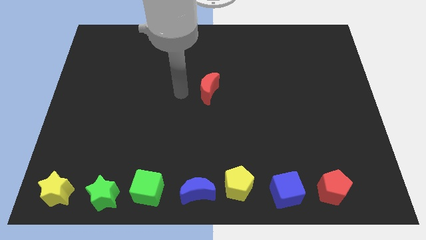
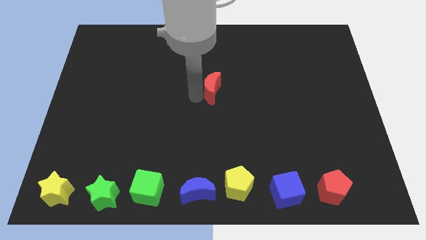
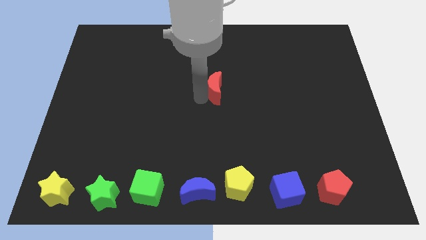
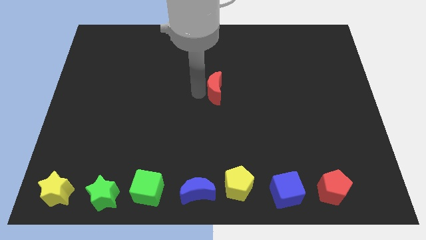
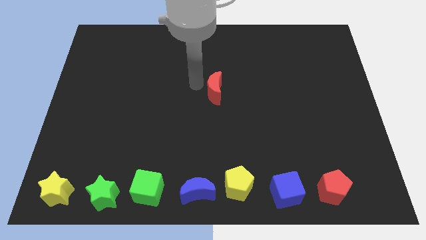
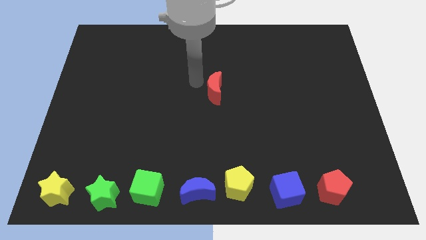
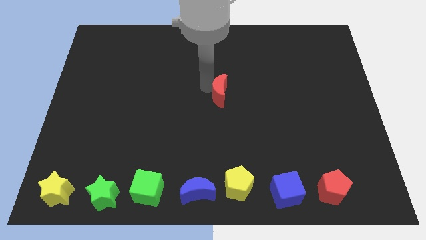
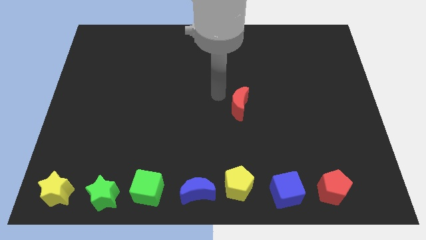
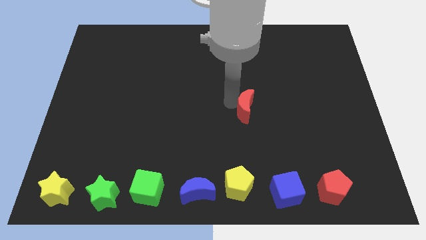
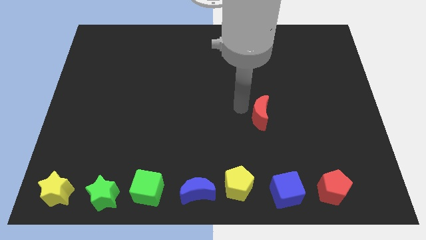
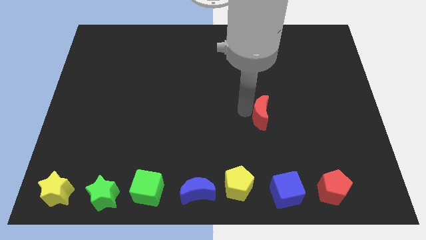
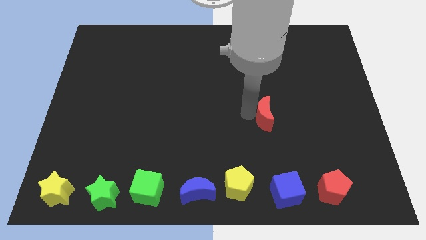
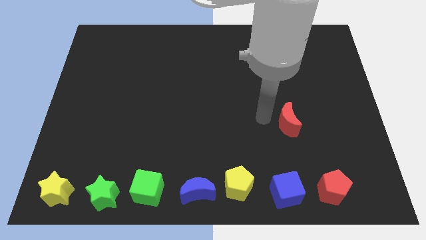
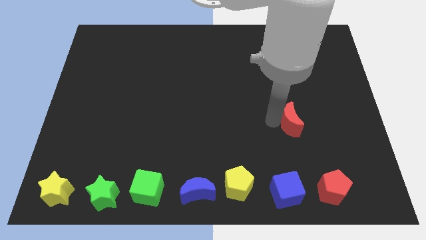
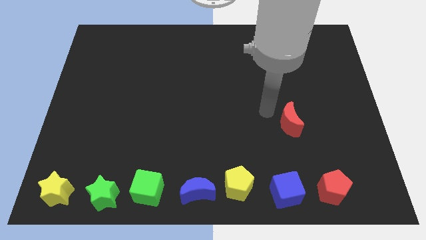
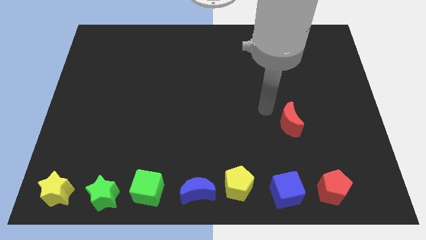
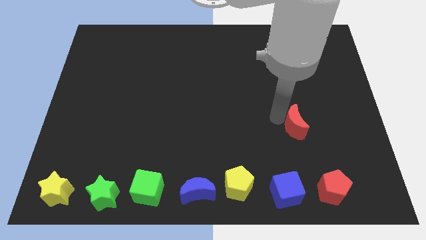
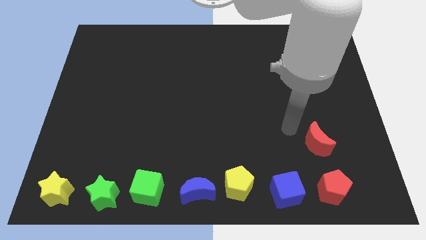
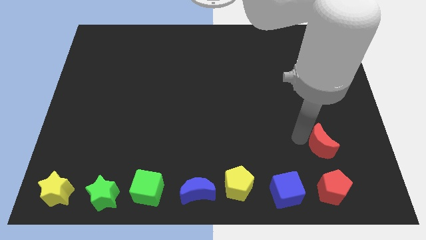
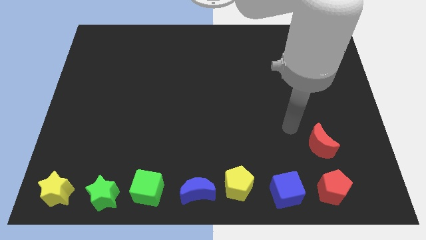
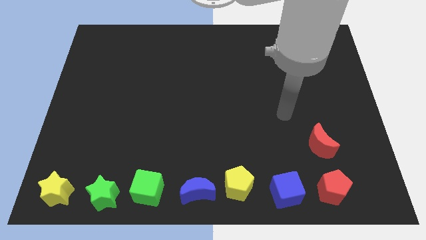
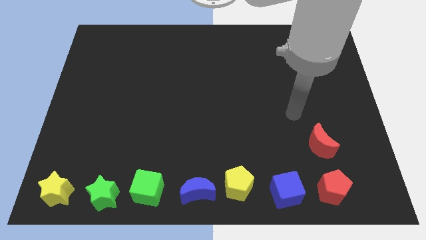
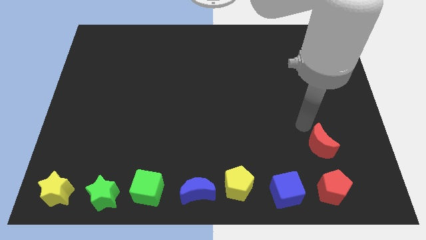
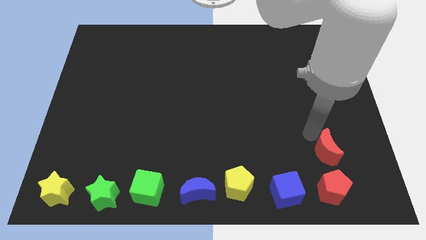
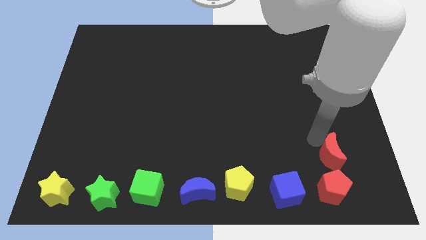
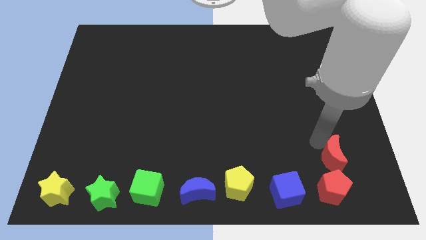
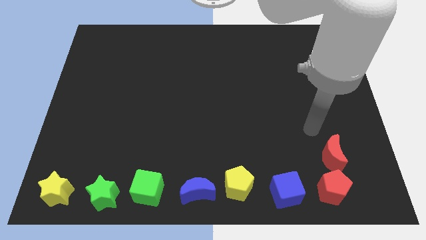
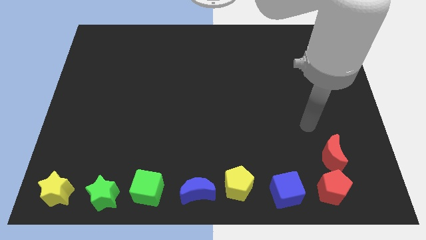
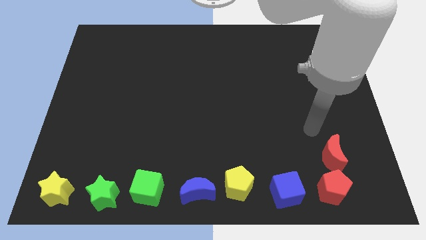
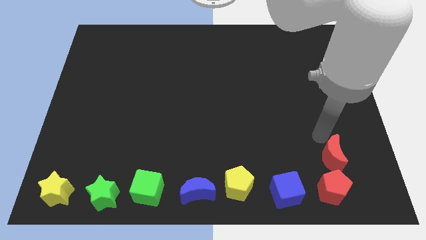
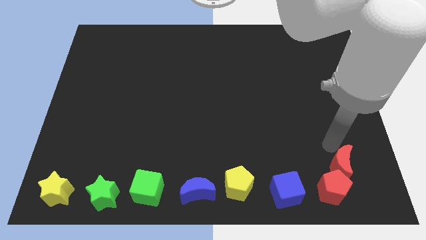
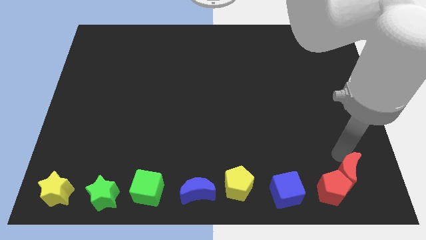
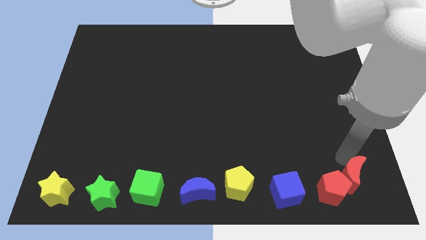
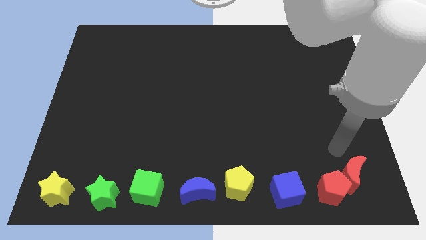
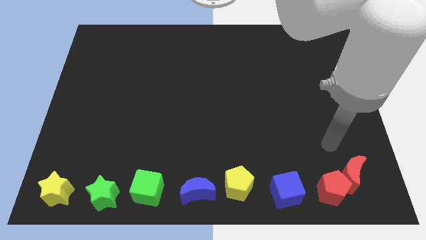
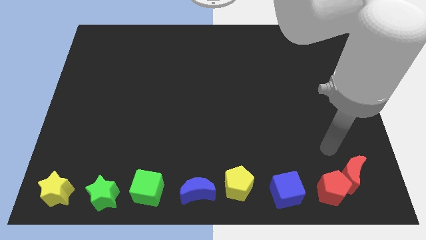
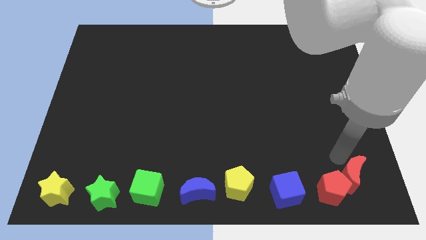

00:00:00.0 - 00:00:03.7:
push the red moon on the top right of the red pentagon

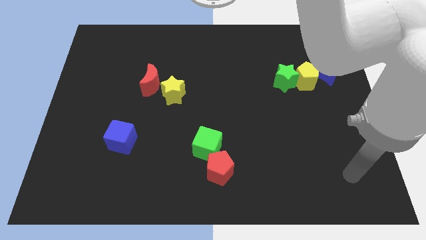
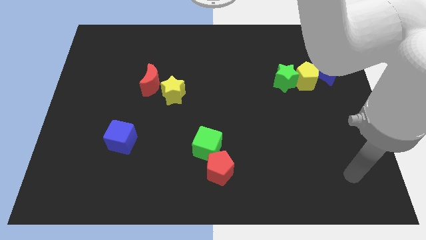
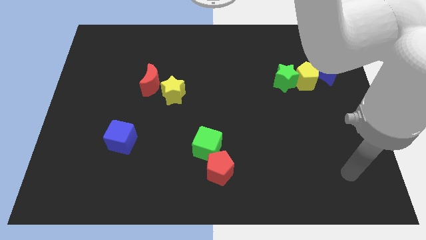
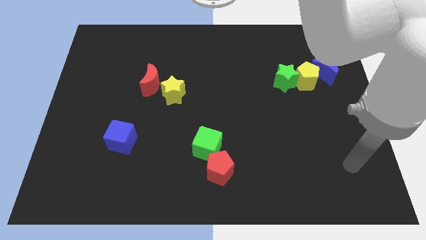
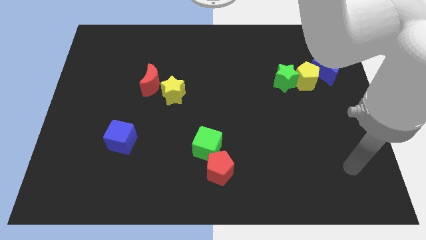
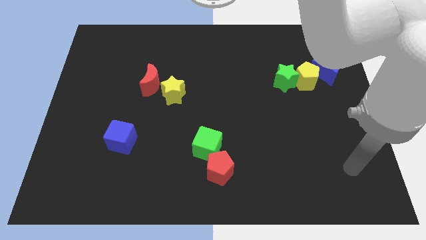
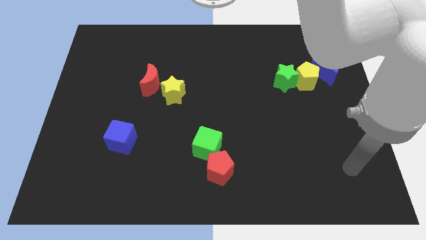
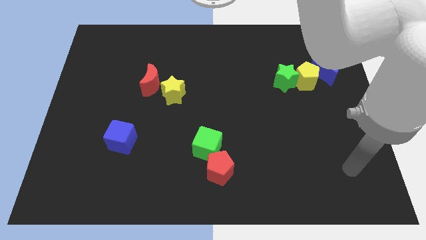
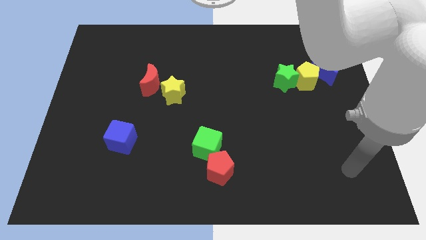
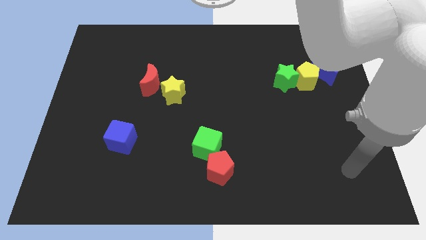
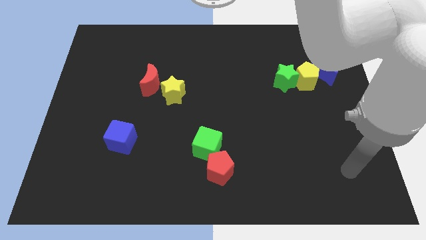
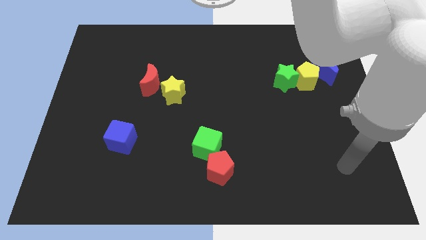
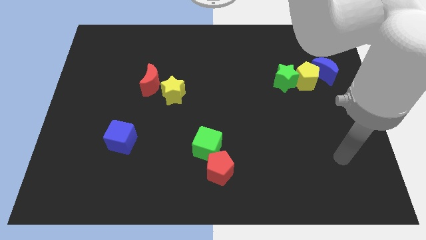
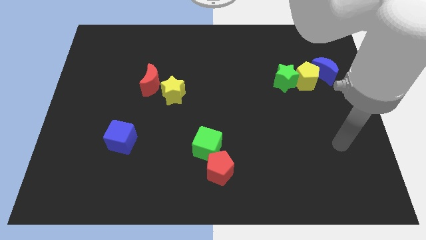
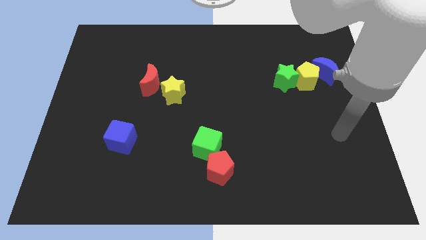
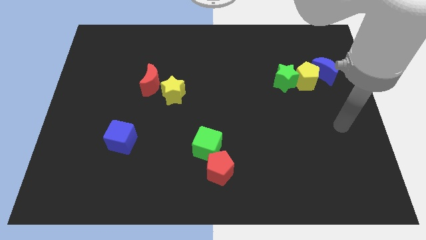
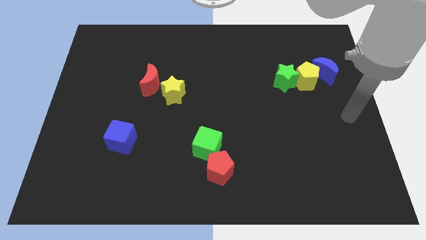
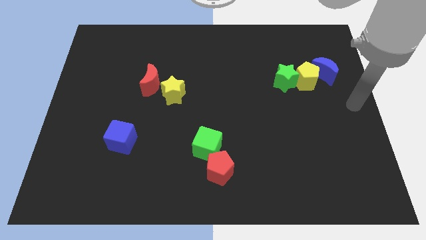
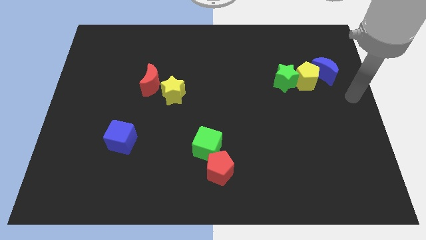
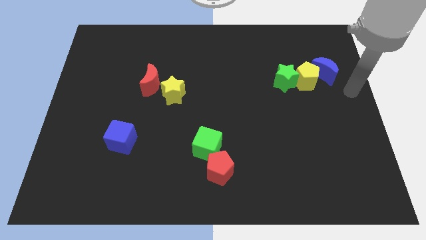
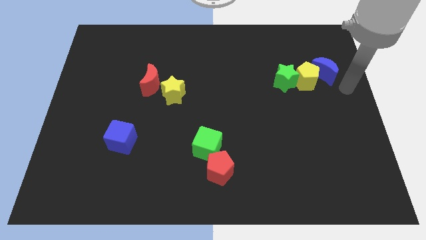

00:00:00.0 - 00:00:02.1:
place your arm to the bottom right of the blue moon

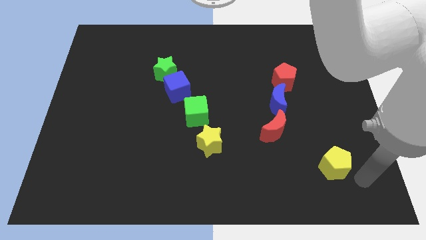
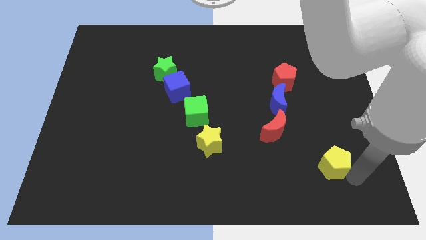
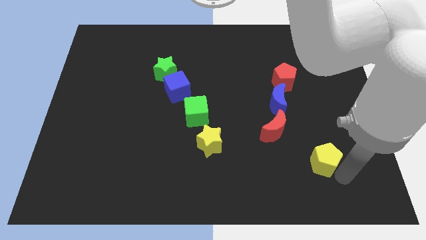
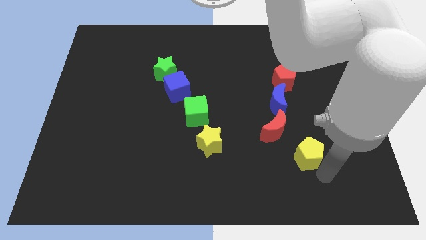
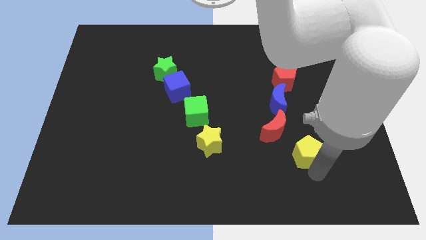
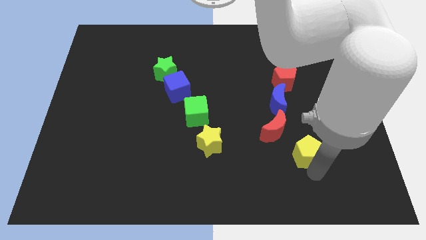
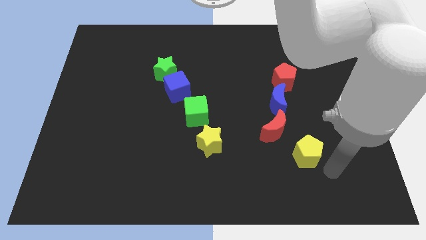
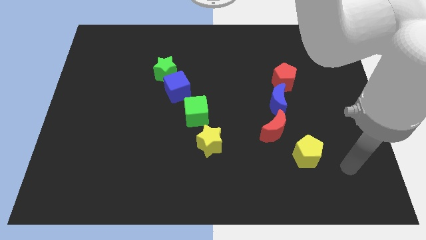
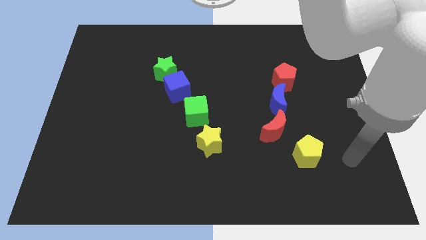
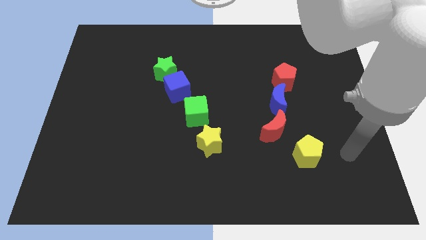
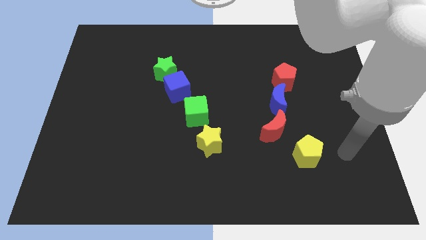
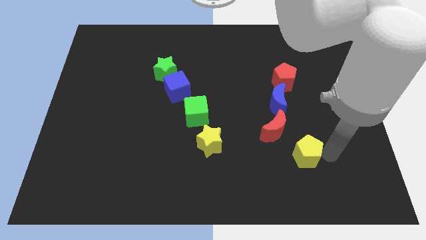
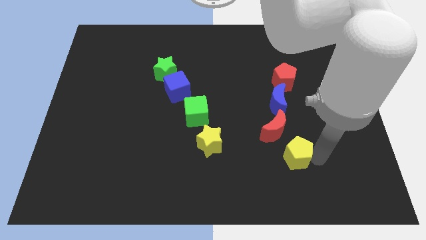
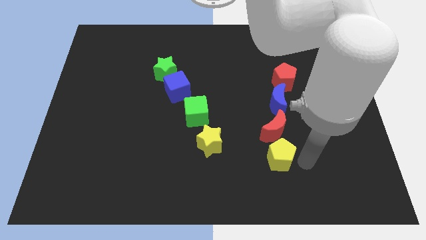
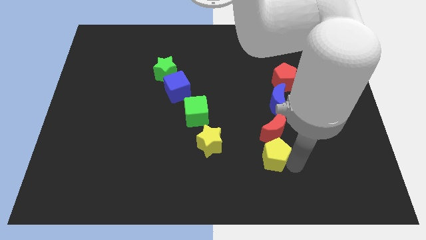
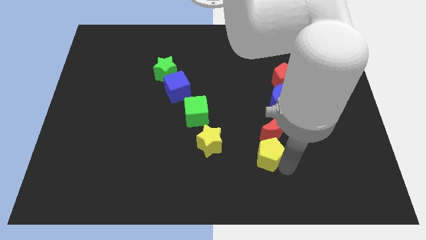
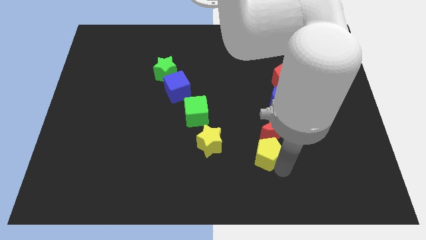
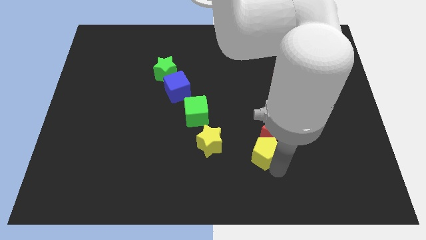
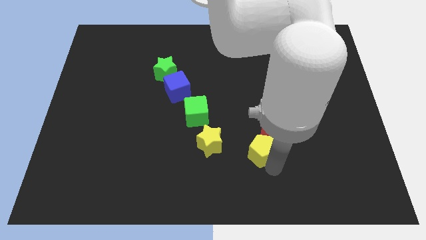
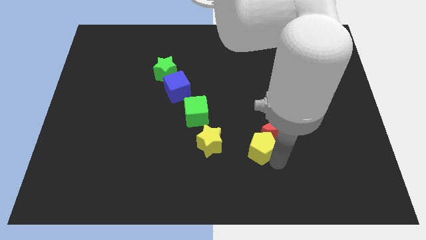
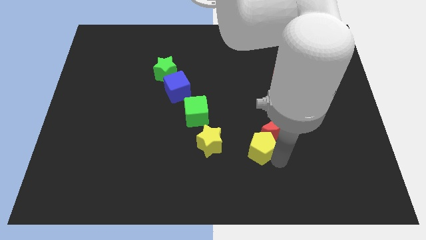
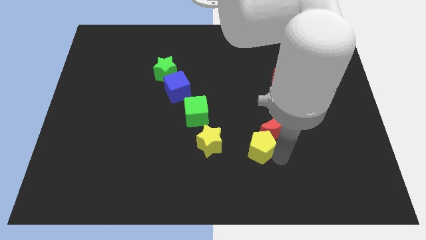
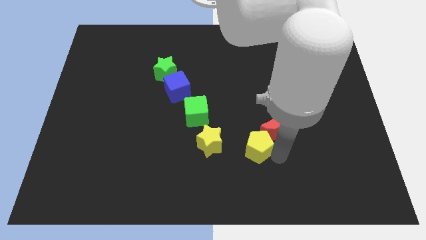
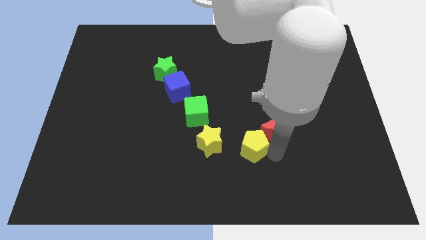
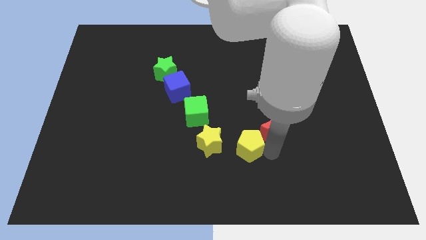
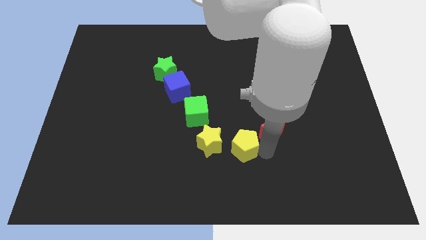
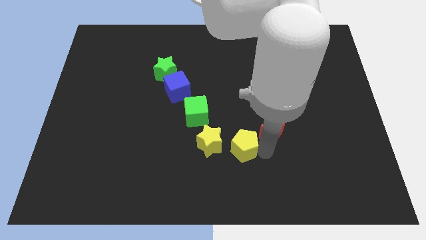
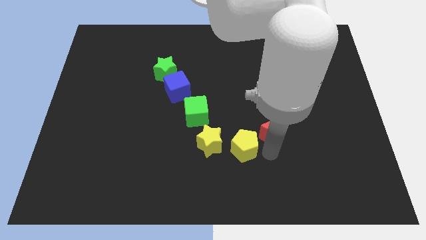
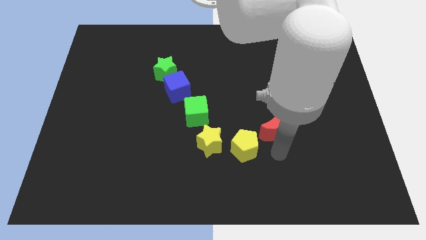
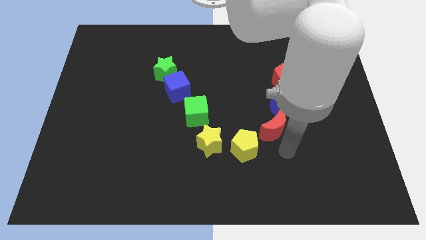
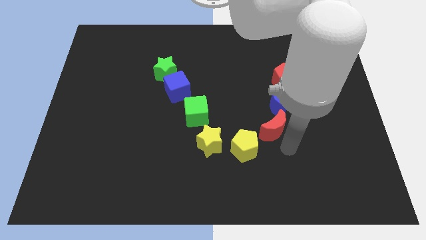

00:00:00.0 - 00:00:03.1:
place yellow pentagon in between yellow star and red moon
